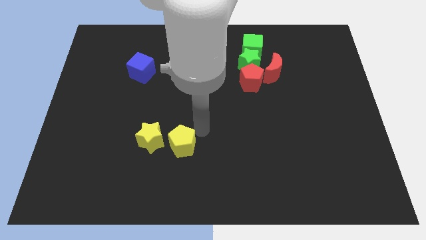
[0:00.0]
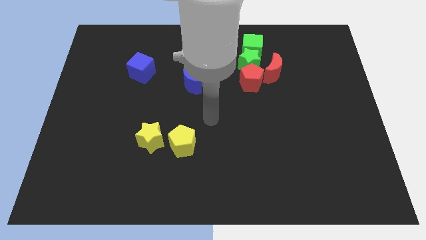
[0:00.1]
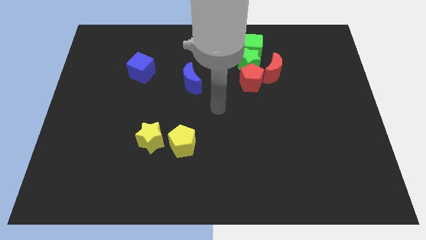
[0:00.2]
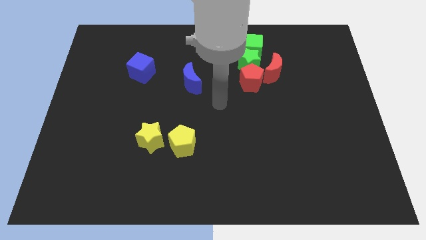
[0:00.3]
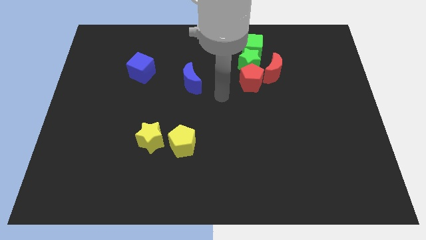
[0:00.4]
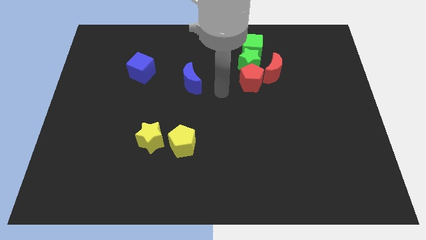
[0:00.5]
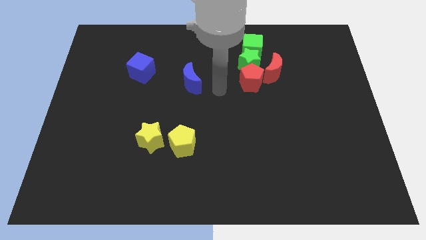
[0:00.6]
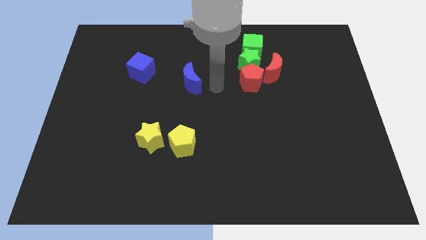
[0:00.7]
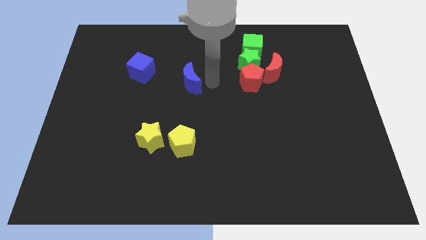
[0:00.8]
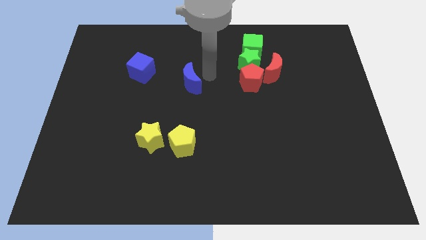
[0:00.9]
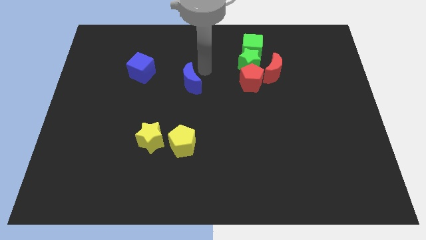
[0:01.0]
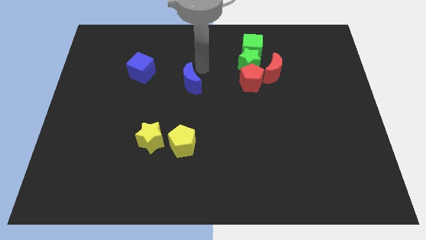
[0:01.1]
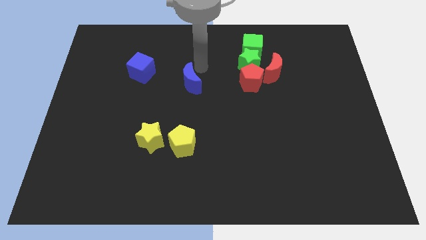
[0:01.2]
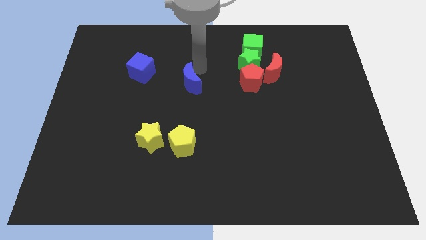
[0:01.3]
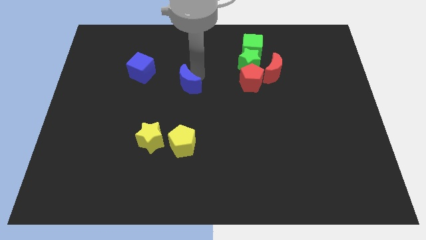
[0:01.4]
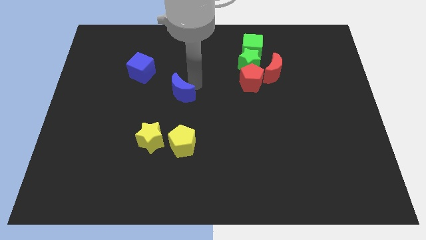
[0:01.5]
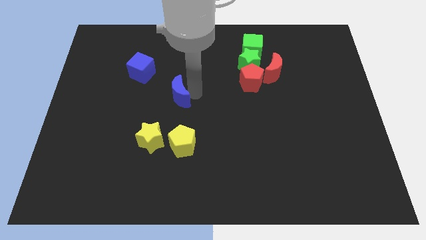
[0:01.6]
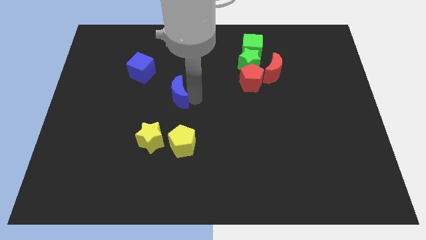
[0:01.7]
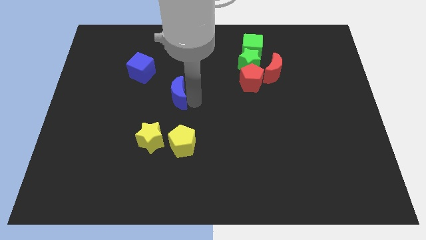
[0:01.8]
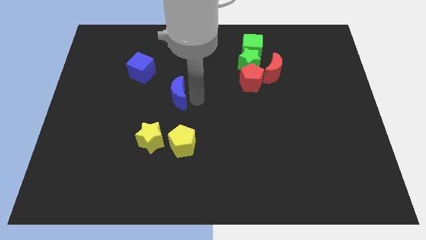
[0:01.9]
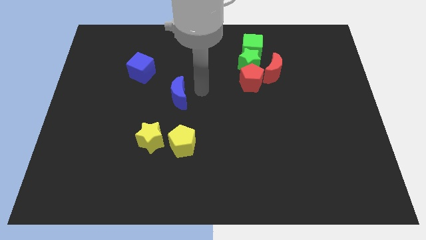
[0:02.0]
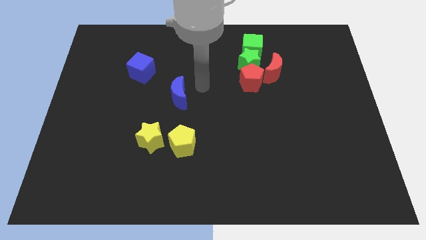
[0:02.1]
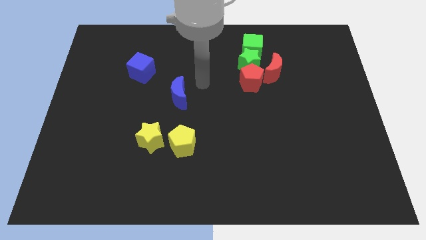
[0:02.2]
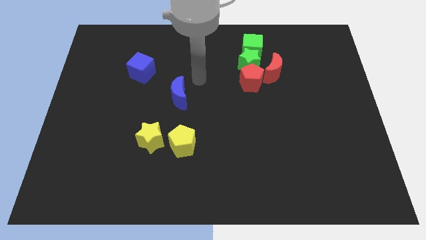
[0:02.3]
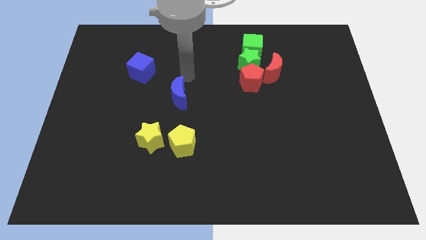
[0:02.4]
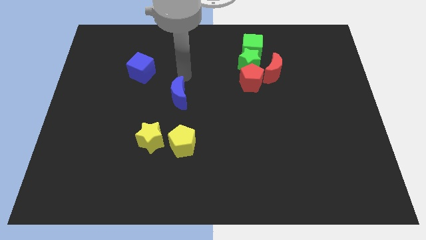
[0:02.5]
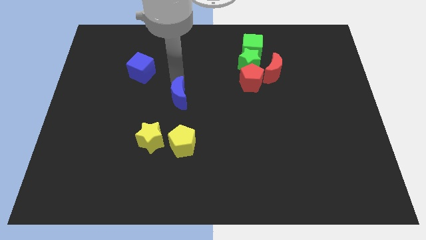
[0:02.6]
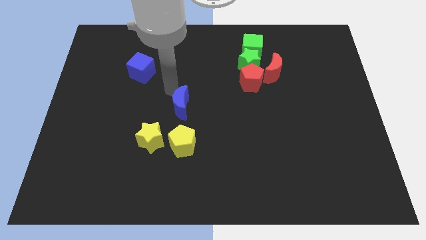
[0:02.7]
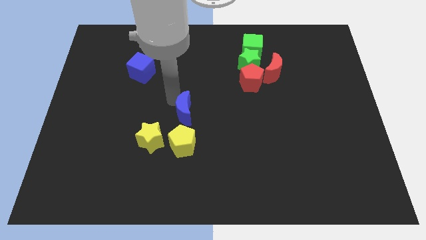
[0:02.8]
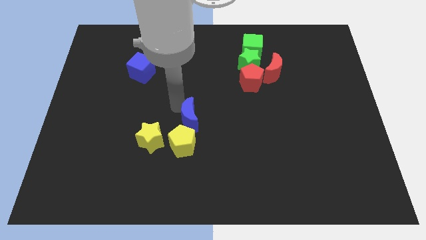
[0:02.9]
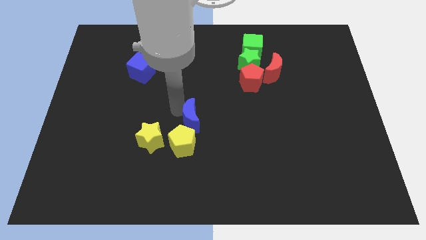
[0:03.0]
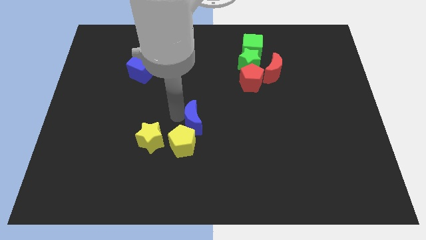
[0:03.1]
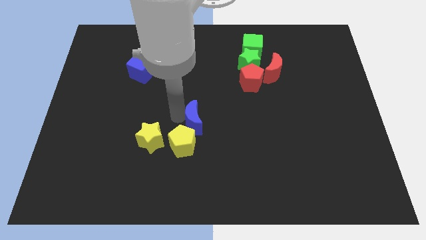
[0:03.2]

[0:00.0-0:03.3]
place the blue crescent on right top side of the yellow pentagon

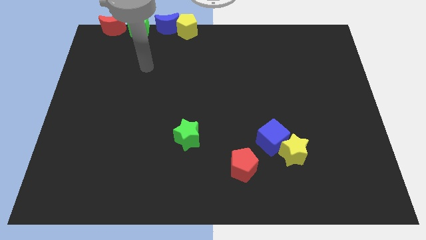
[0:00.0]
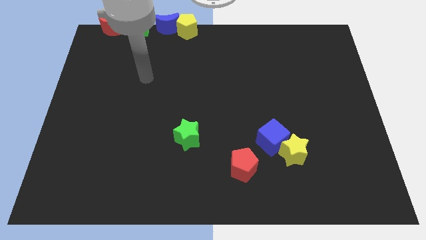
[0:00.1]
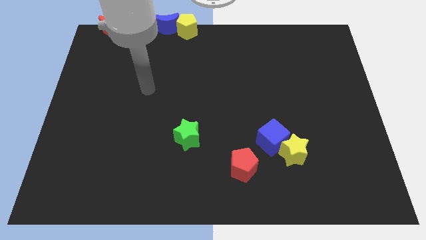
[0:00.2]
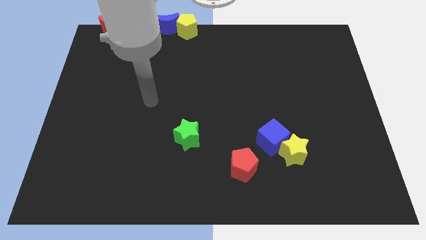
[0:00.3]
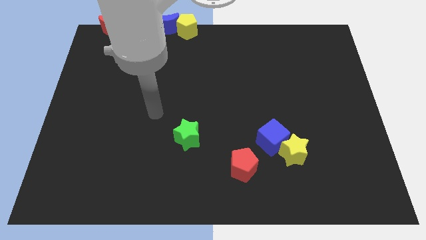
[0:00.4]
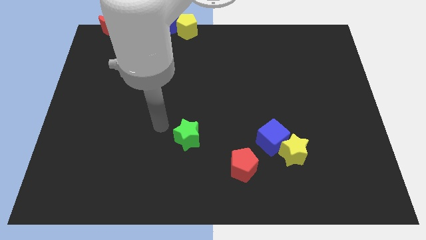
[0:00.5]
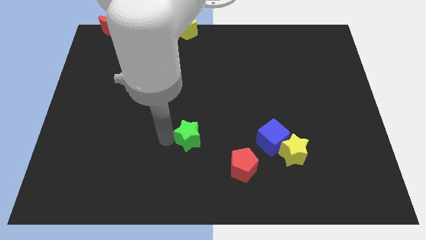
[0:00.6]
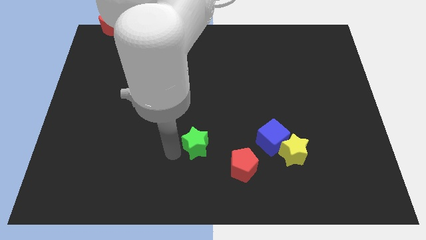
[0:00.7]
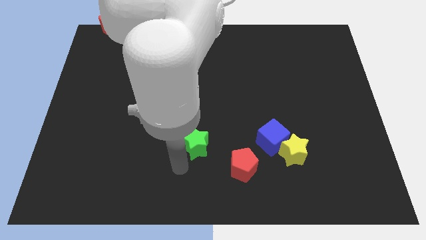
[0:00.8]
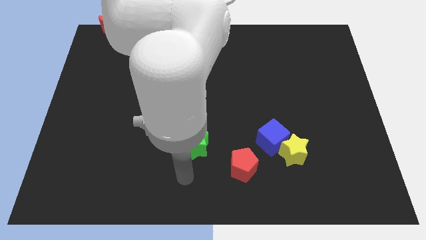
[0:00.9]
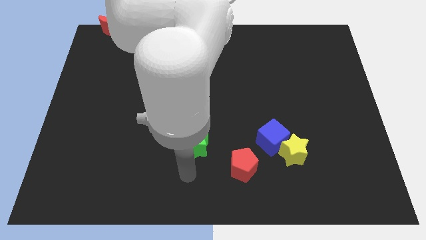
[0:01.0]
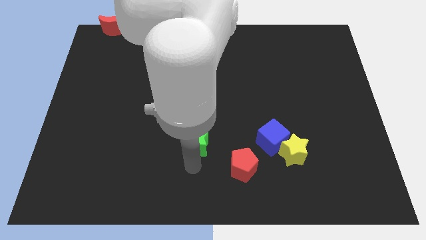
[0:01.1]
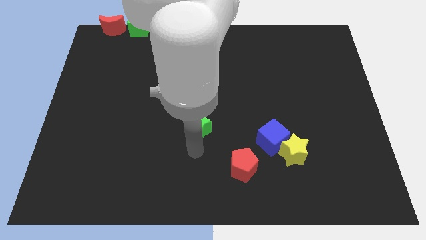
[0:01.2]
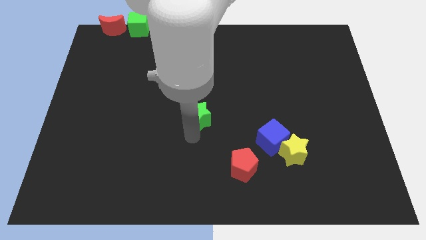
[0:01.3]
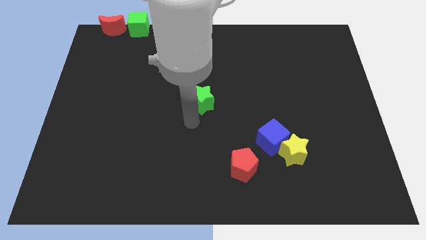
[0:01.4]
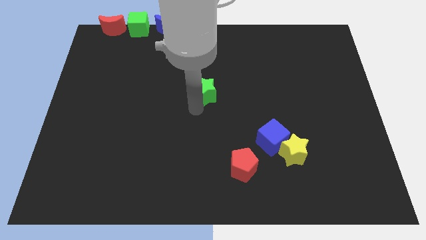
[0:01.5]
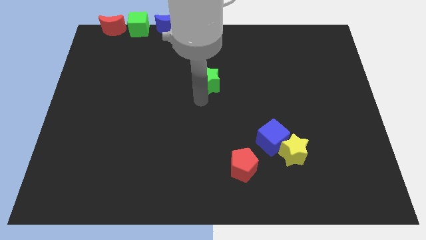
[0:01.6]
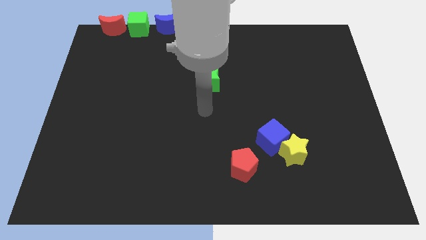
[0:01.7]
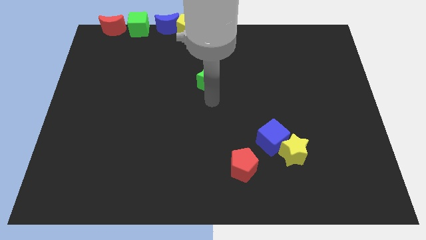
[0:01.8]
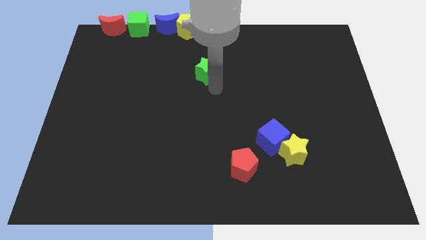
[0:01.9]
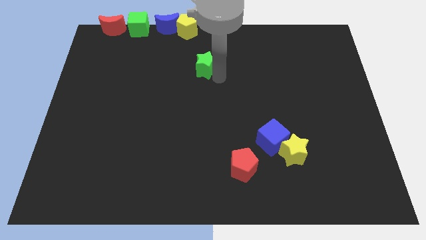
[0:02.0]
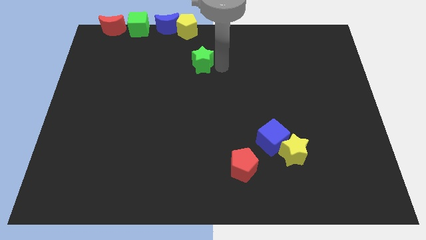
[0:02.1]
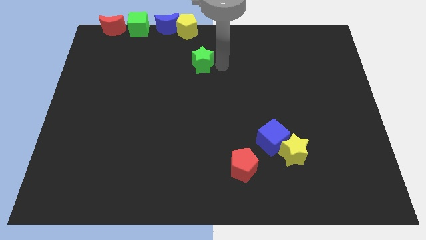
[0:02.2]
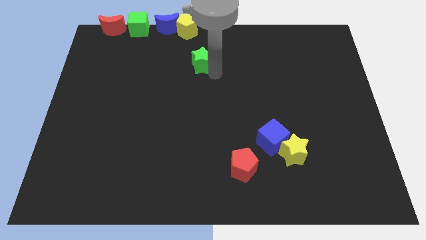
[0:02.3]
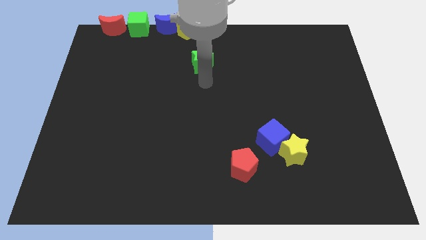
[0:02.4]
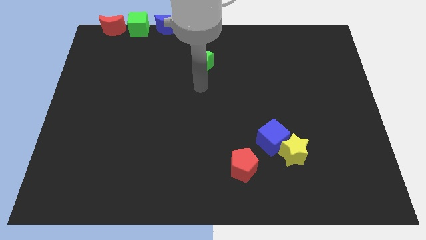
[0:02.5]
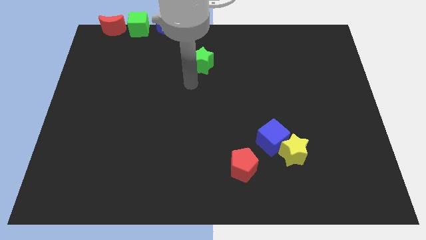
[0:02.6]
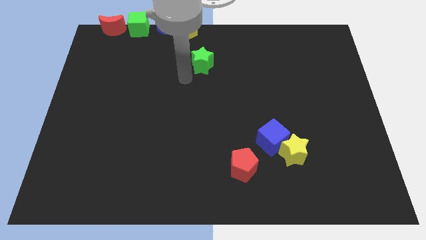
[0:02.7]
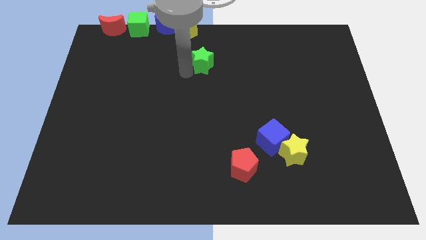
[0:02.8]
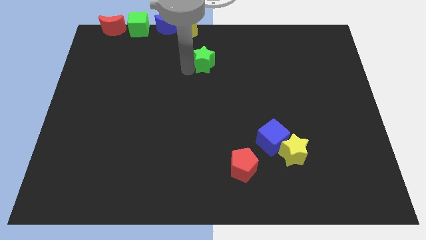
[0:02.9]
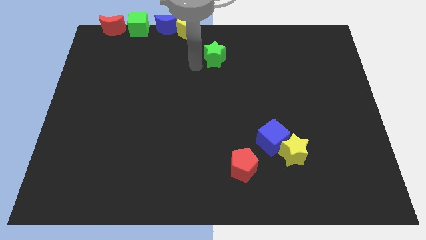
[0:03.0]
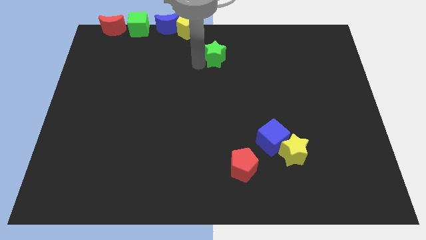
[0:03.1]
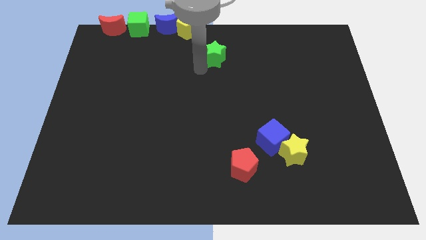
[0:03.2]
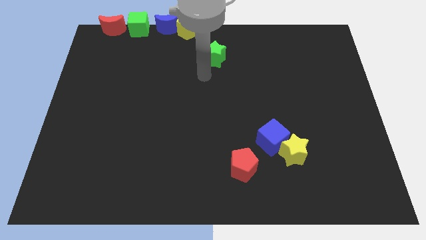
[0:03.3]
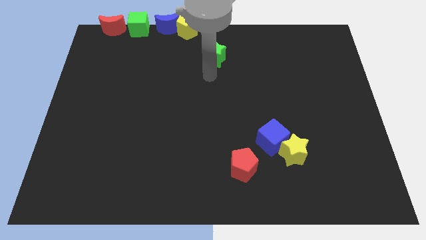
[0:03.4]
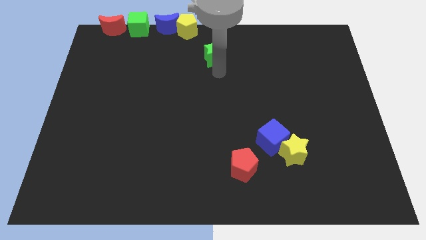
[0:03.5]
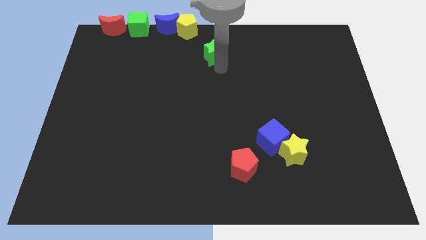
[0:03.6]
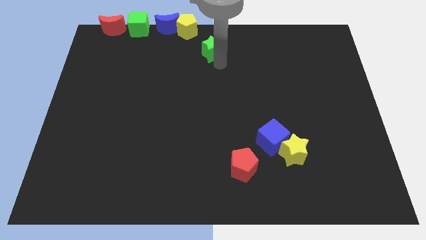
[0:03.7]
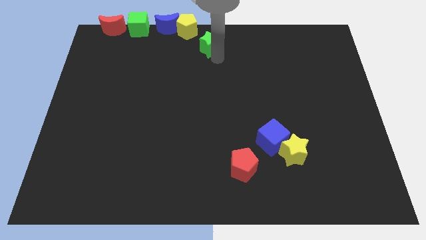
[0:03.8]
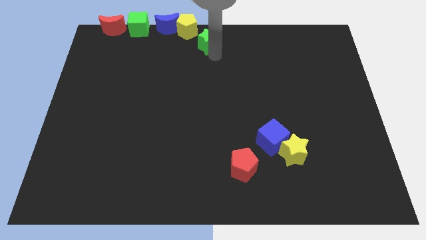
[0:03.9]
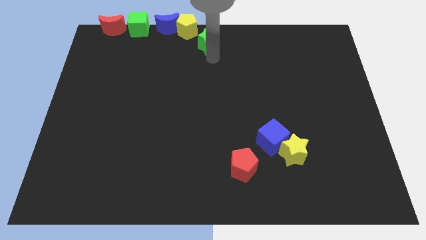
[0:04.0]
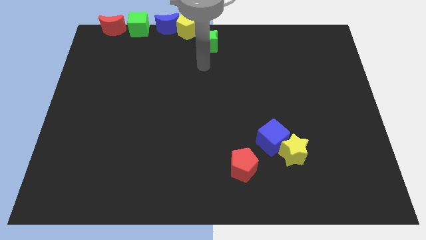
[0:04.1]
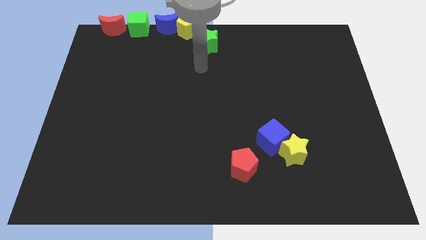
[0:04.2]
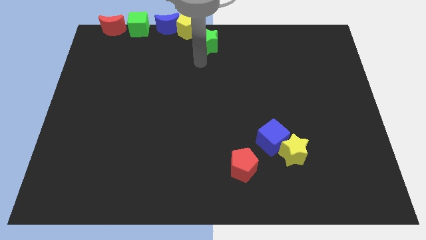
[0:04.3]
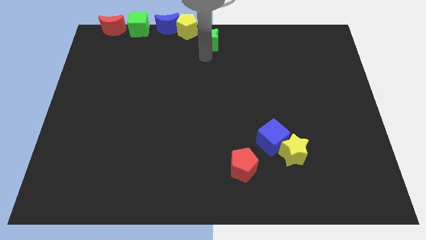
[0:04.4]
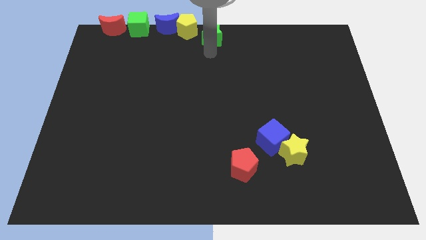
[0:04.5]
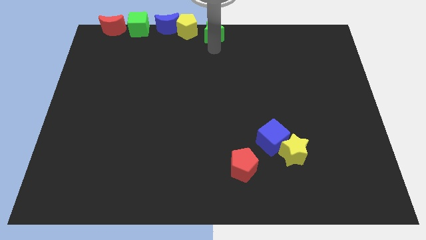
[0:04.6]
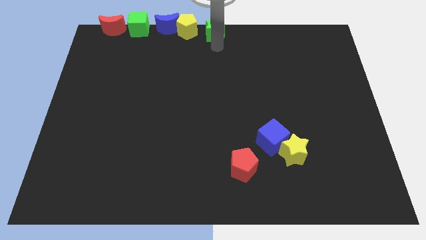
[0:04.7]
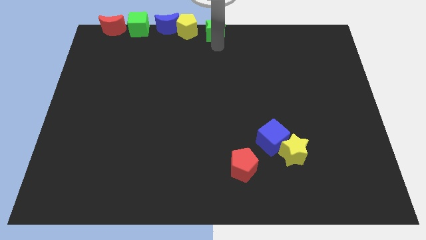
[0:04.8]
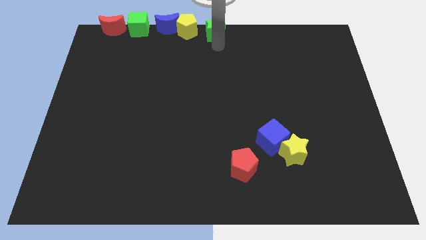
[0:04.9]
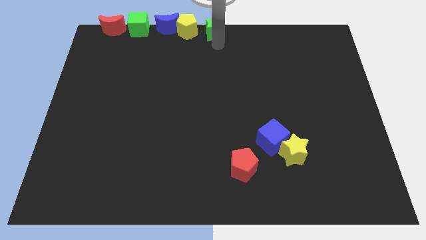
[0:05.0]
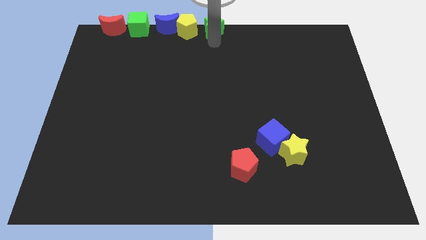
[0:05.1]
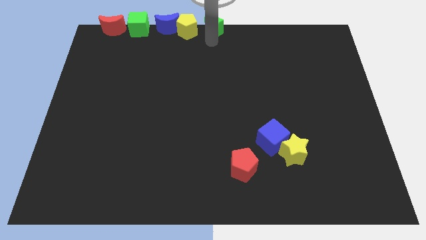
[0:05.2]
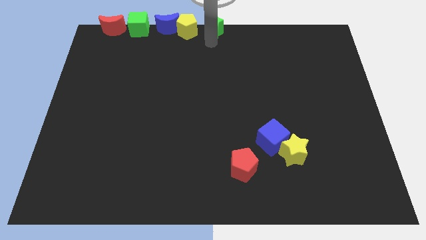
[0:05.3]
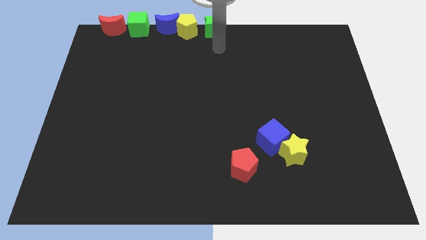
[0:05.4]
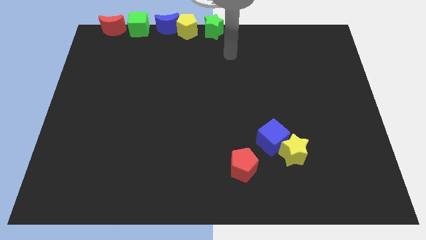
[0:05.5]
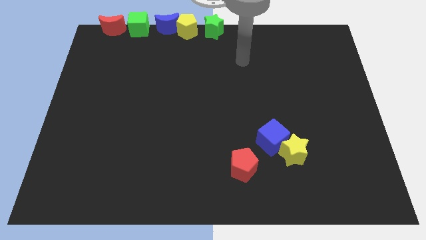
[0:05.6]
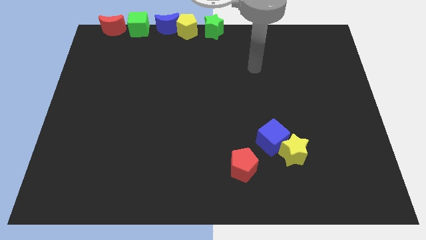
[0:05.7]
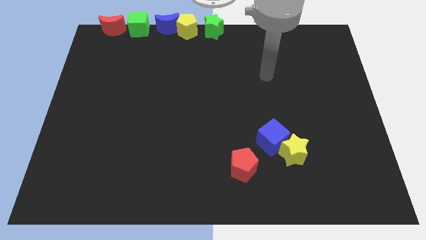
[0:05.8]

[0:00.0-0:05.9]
move the green star to the right side of the yellow pentagon
